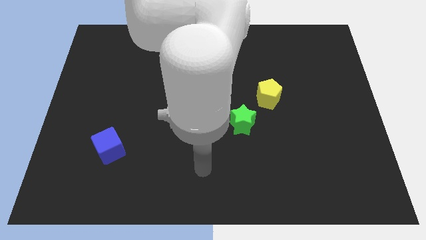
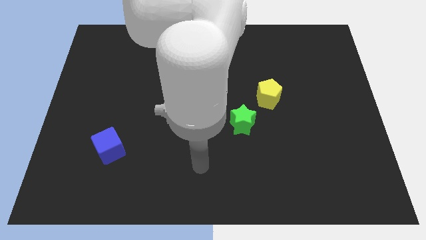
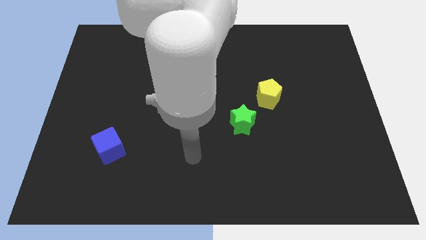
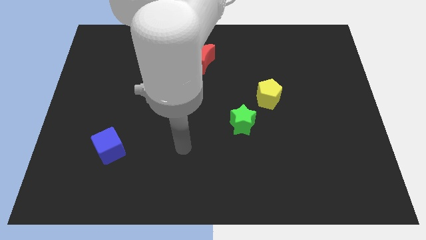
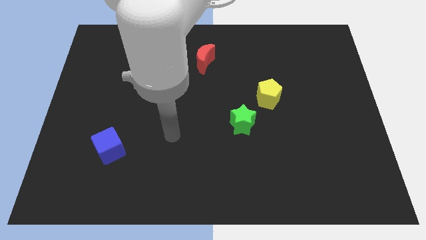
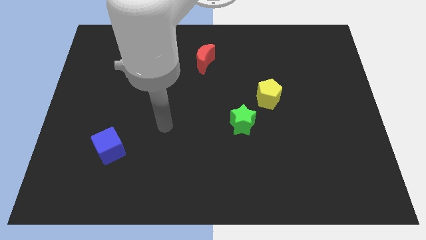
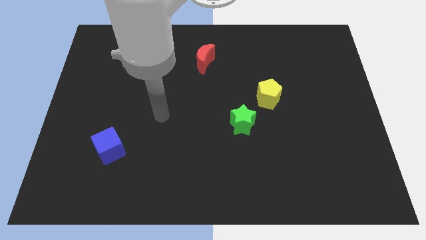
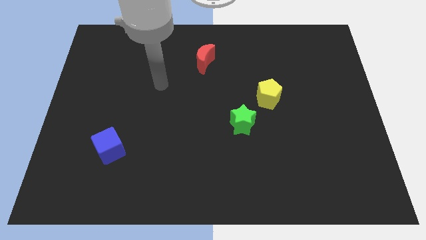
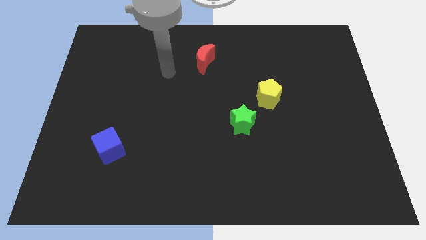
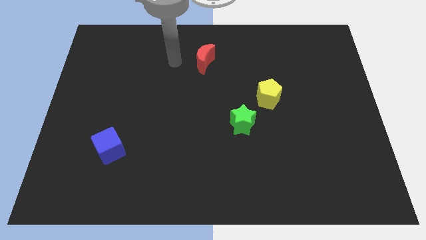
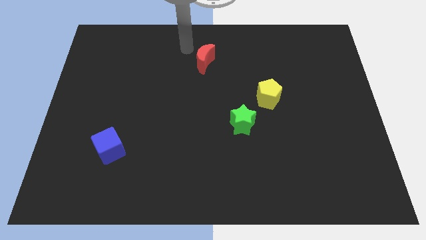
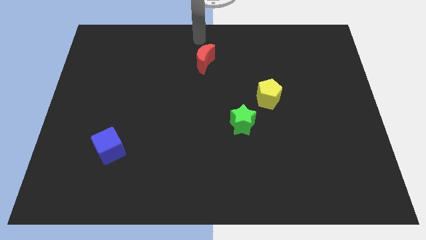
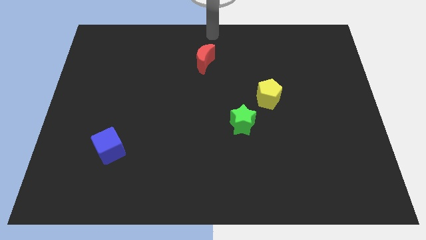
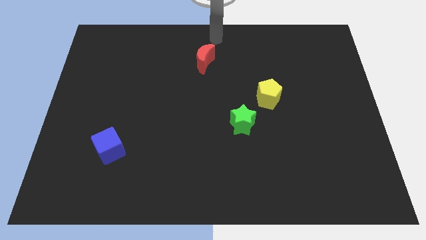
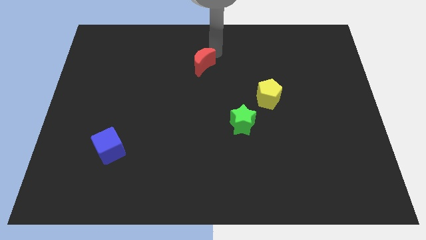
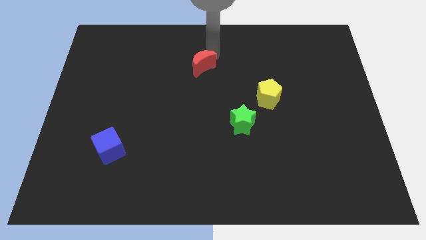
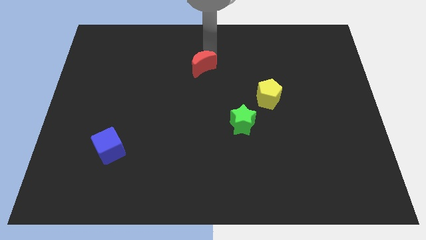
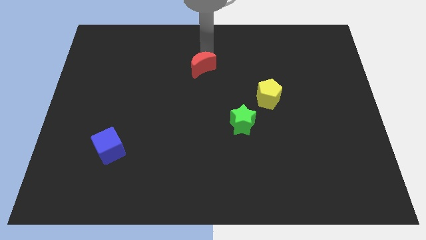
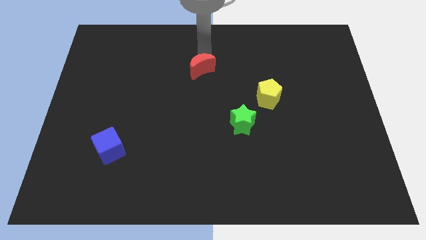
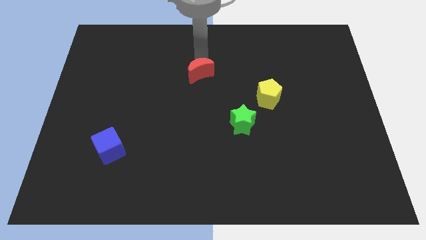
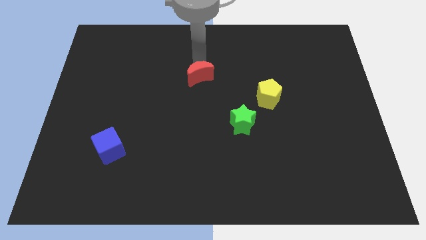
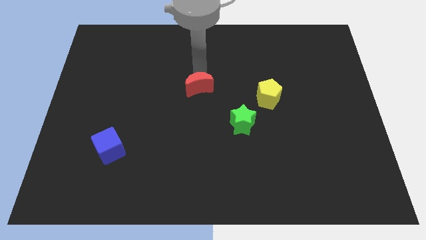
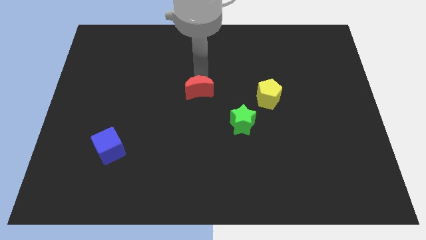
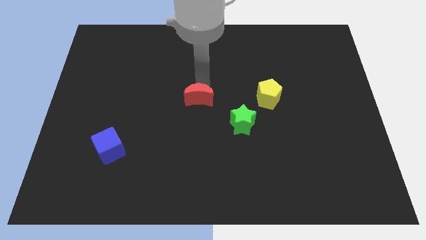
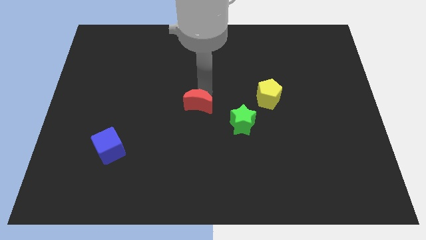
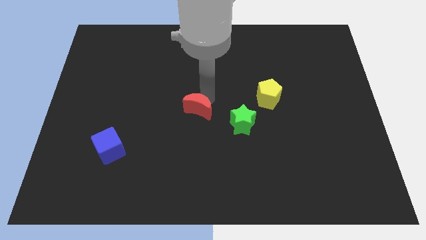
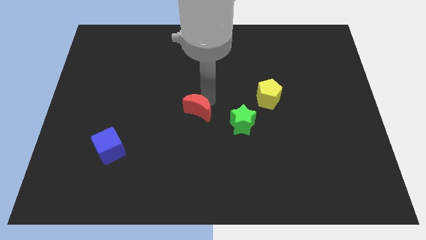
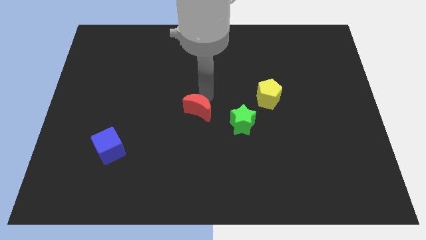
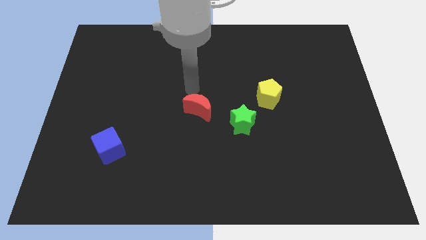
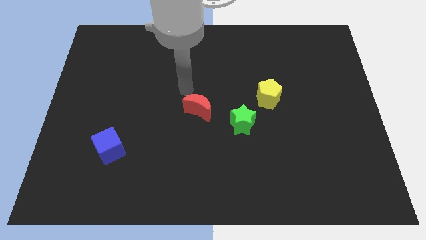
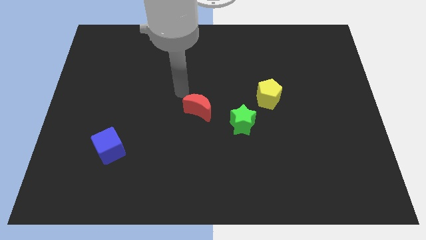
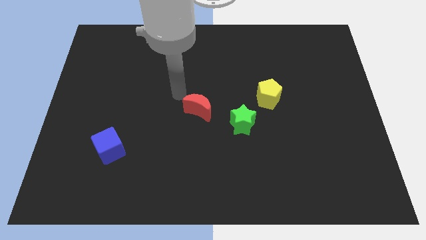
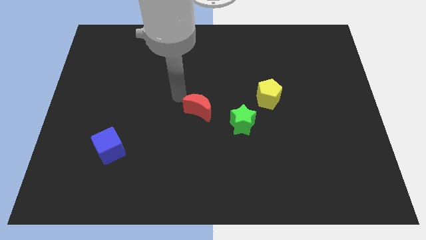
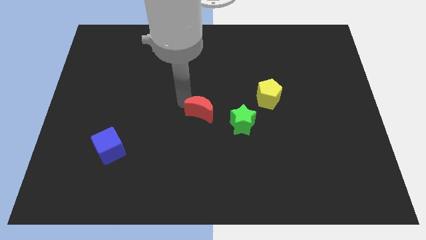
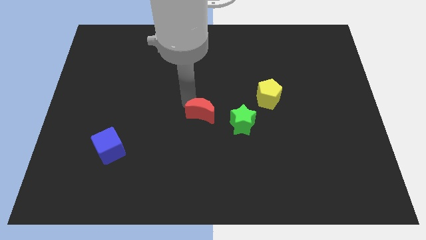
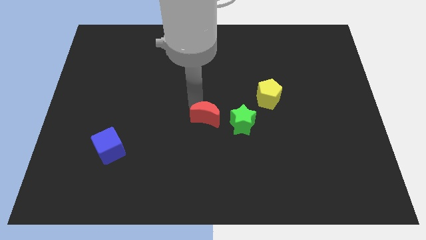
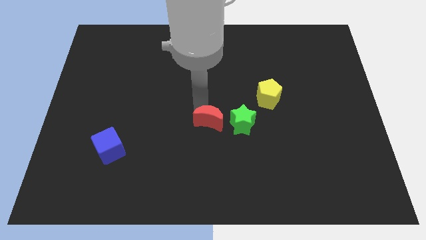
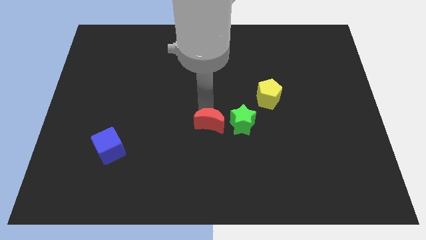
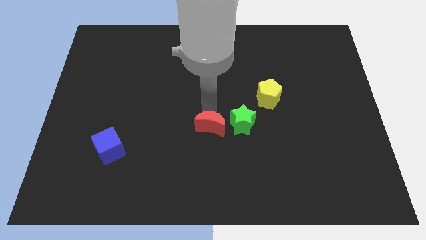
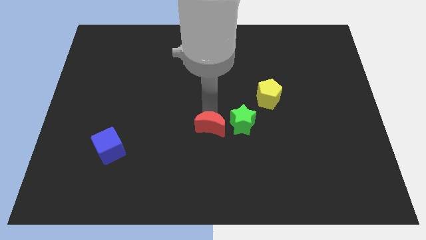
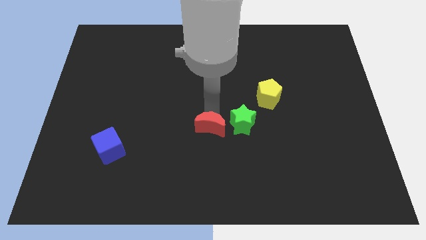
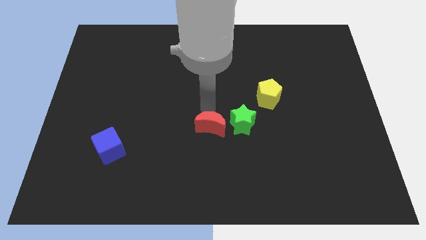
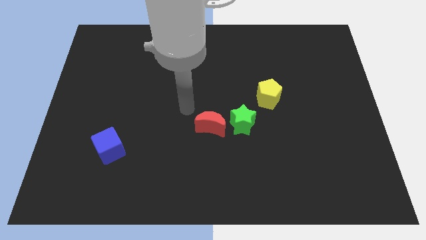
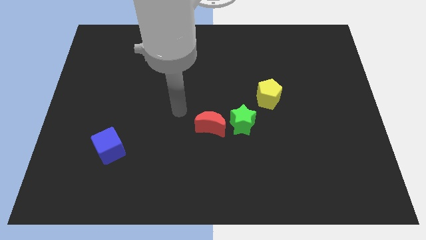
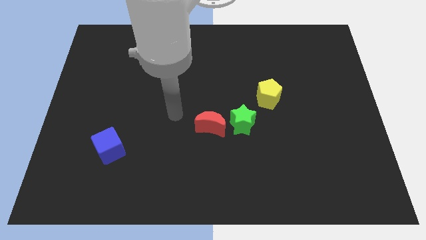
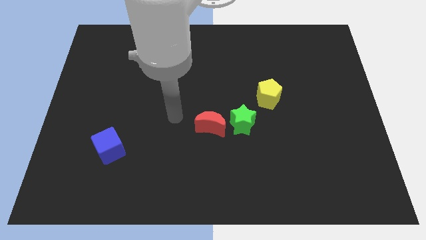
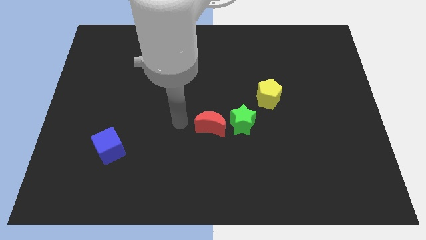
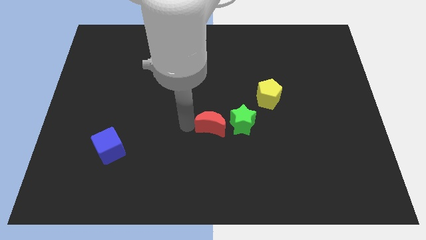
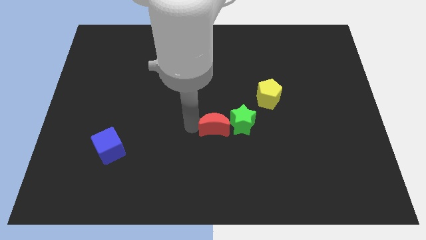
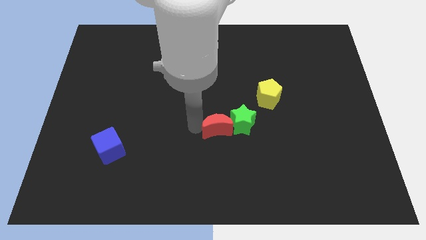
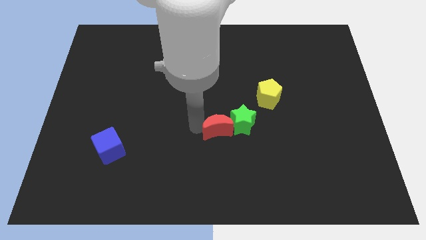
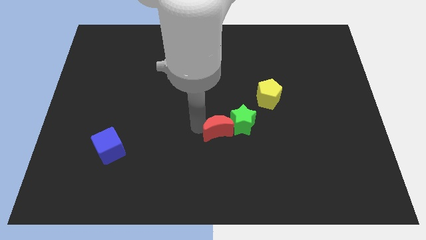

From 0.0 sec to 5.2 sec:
put the moon to the green block

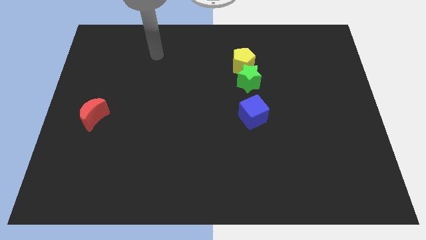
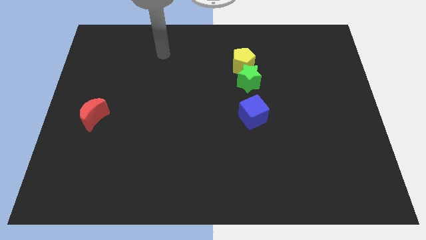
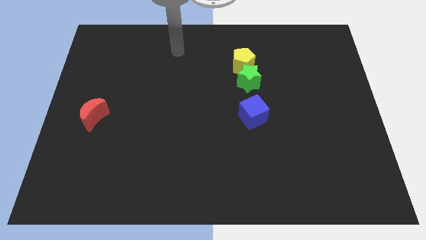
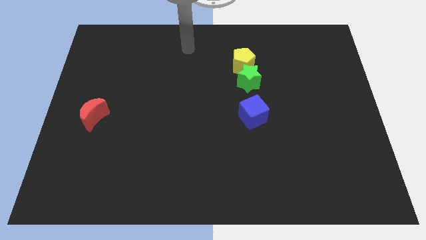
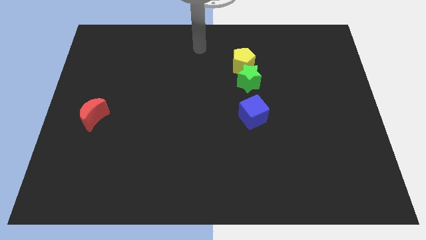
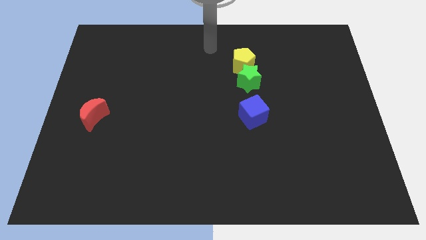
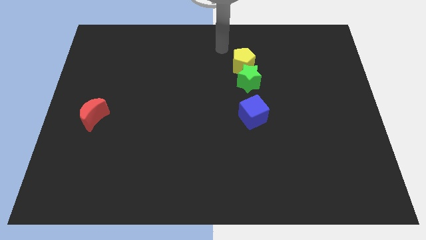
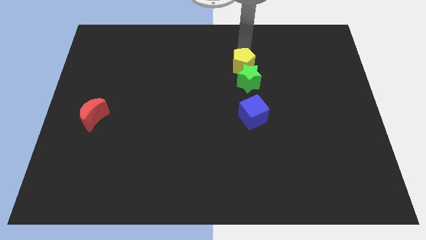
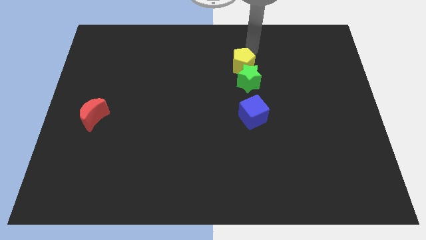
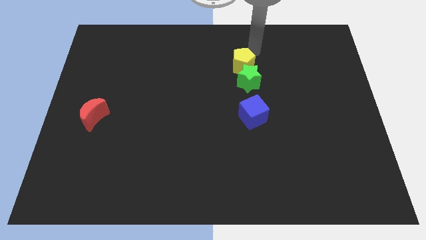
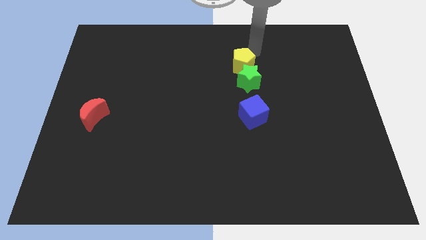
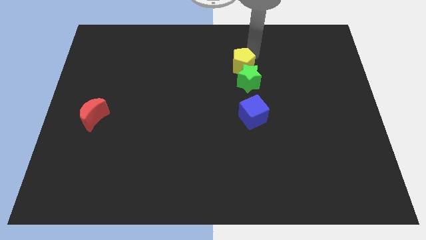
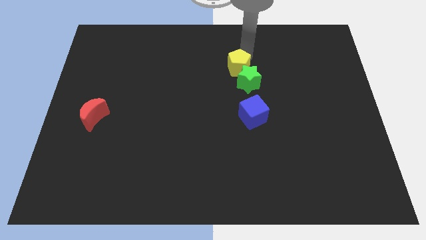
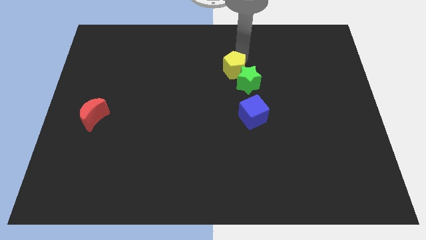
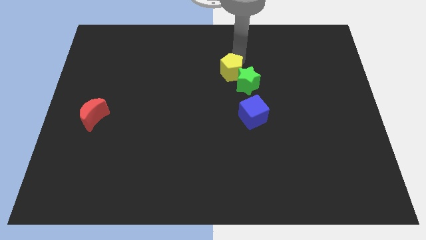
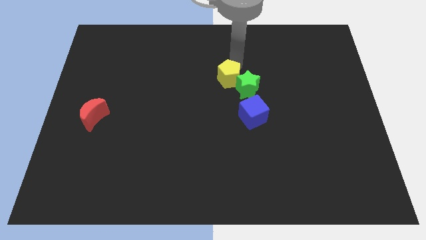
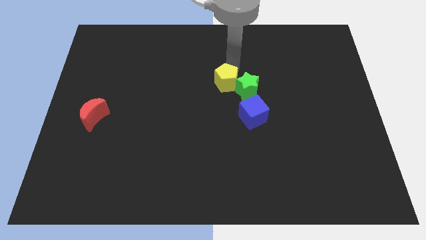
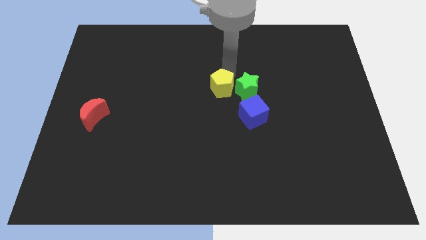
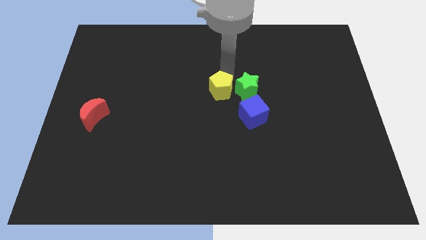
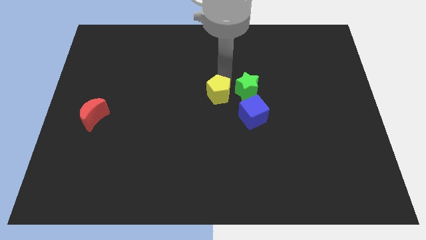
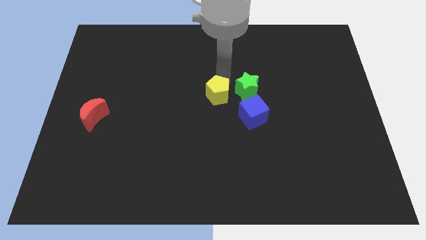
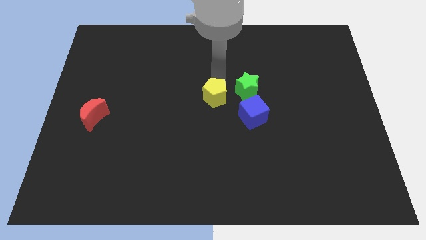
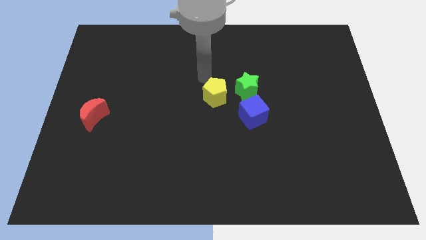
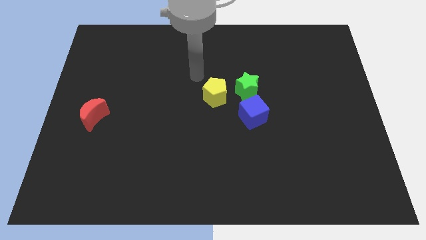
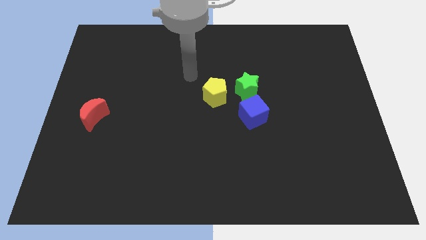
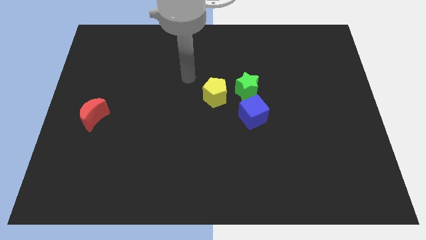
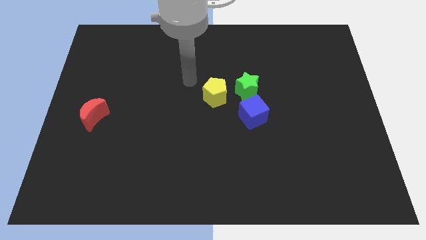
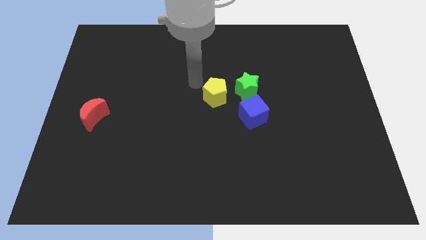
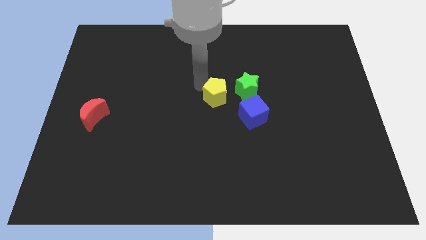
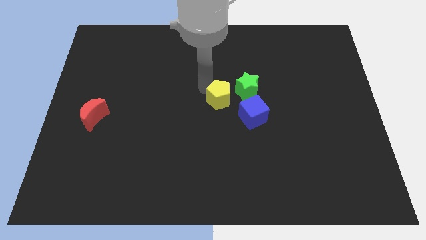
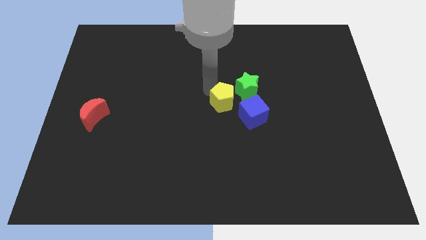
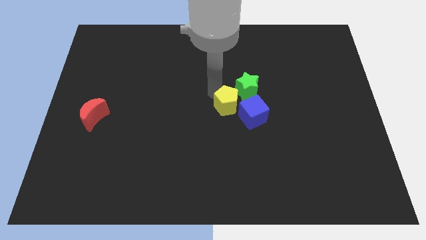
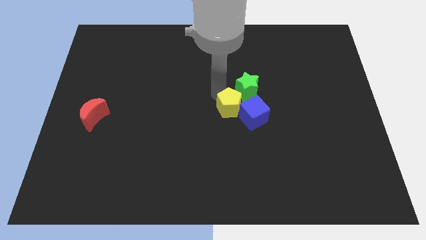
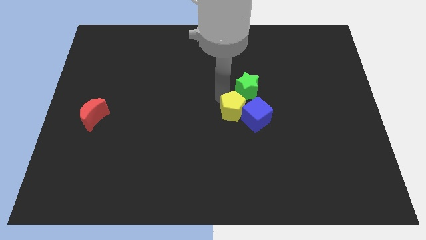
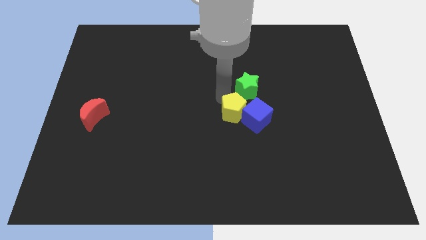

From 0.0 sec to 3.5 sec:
slide the yellow pentagon towards the cube
